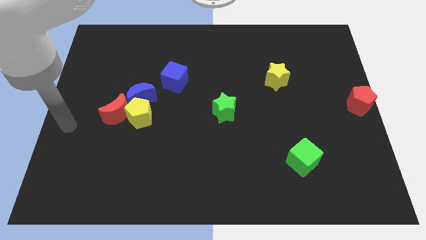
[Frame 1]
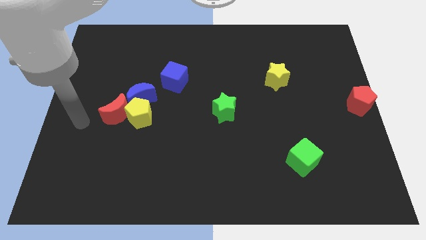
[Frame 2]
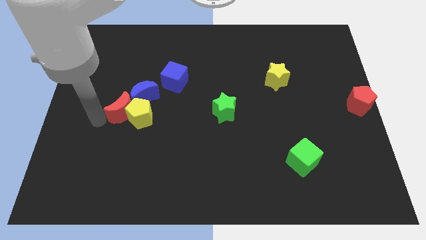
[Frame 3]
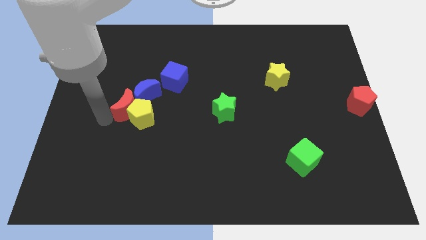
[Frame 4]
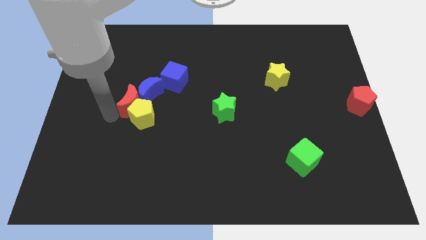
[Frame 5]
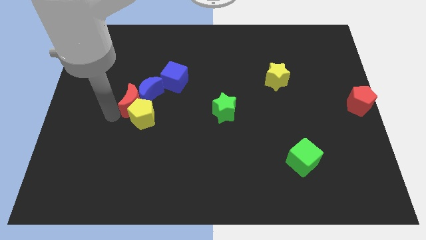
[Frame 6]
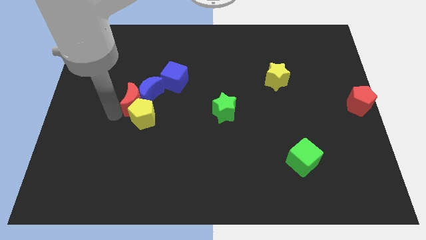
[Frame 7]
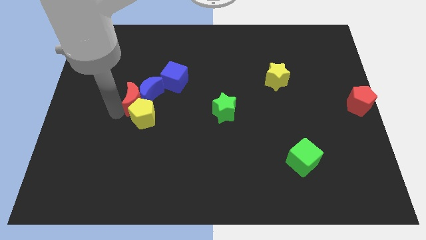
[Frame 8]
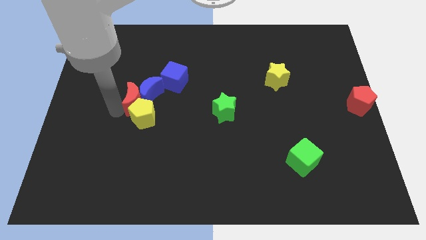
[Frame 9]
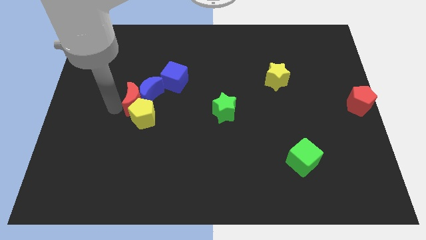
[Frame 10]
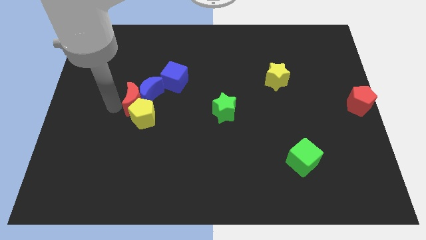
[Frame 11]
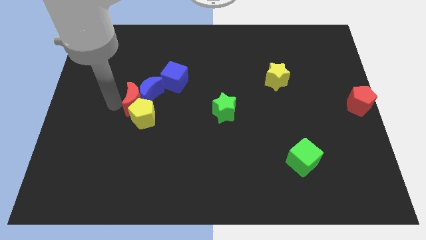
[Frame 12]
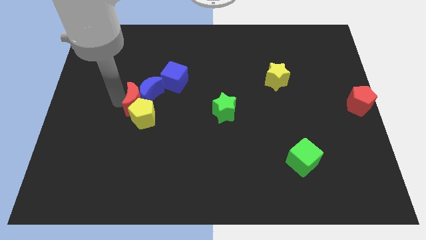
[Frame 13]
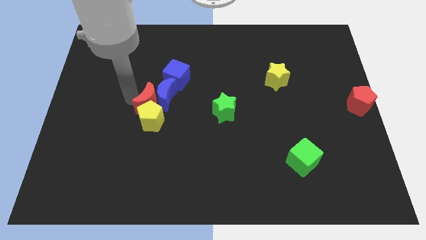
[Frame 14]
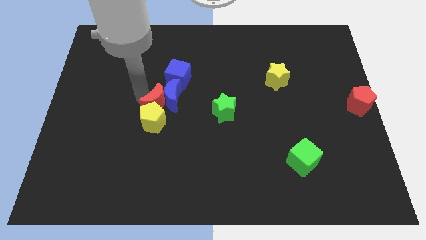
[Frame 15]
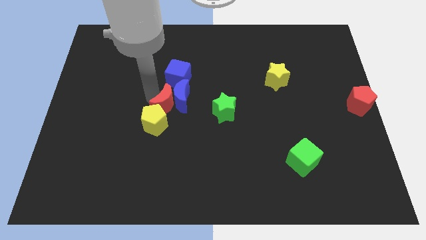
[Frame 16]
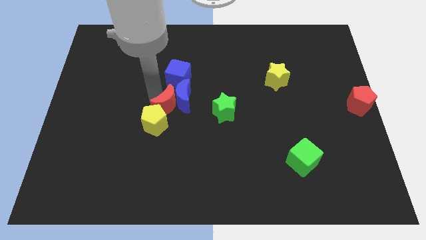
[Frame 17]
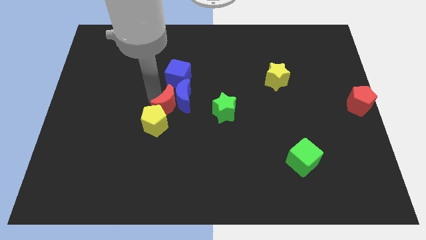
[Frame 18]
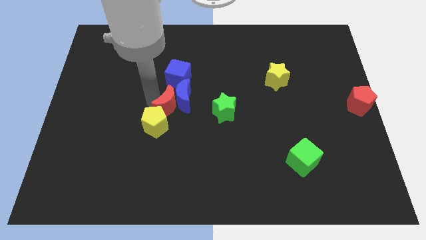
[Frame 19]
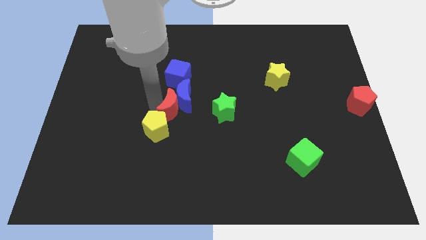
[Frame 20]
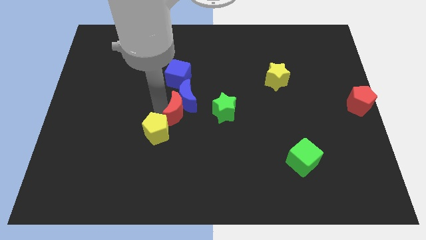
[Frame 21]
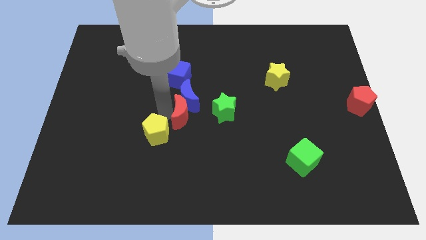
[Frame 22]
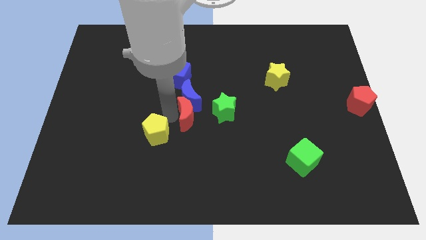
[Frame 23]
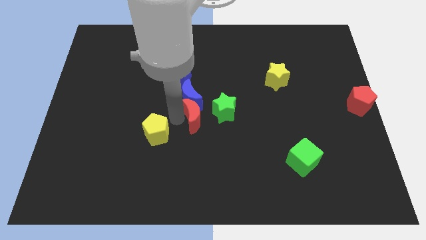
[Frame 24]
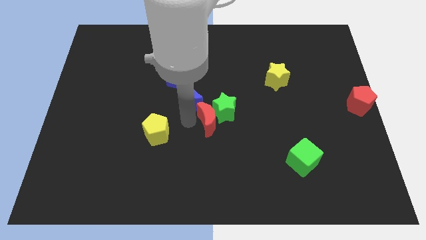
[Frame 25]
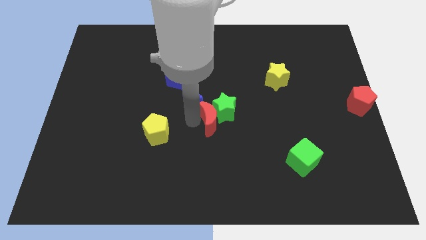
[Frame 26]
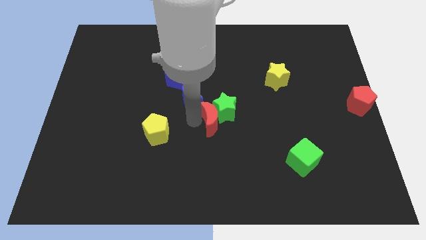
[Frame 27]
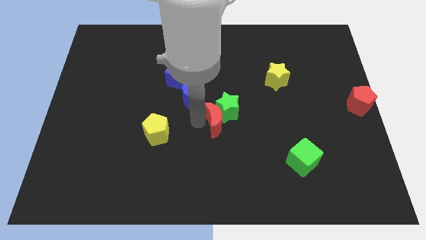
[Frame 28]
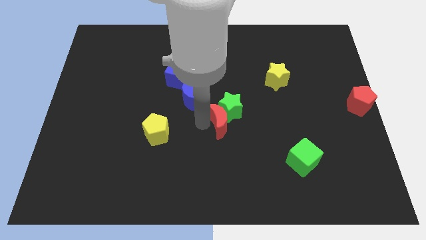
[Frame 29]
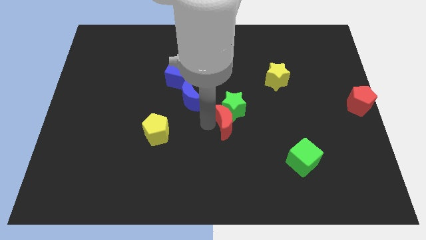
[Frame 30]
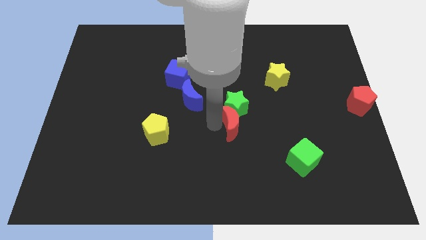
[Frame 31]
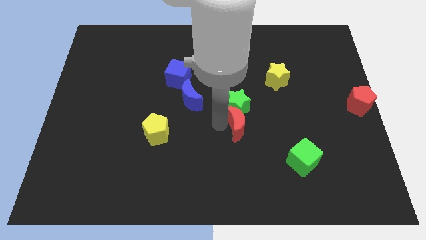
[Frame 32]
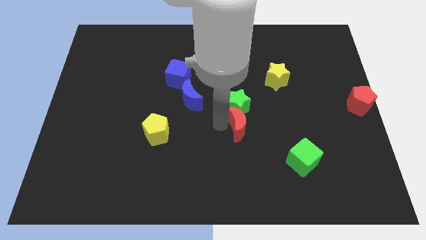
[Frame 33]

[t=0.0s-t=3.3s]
push the red moon into the green star

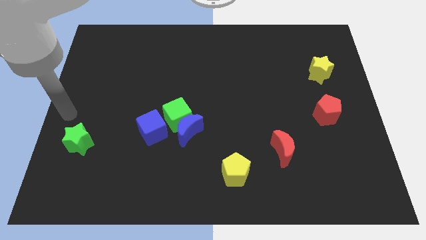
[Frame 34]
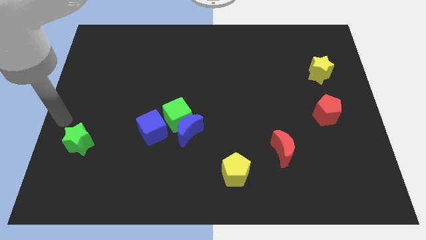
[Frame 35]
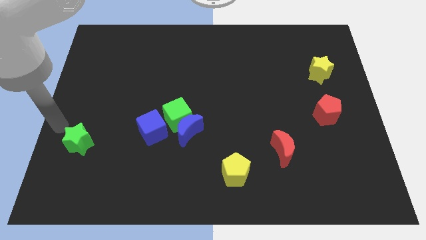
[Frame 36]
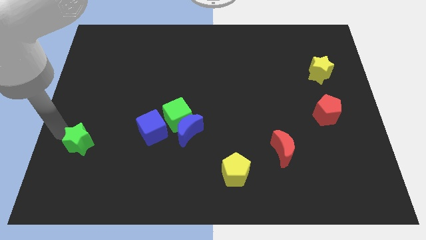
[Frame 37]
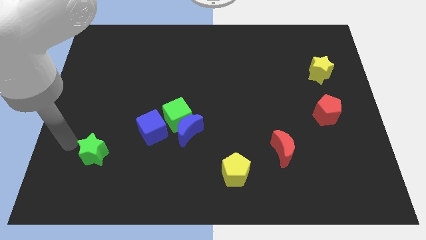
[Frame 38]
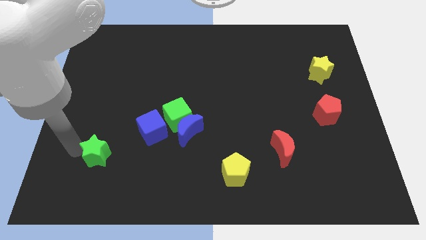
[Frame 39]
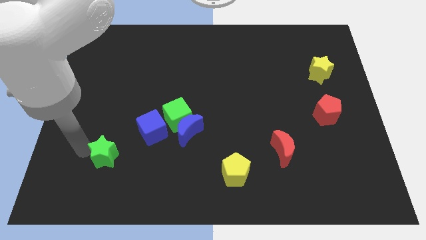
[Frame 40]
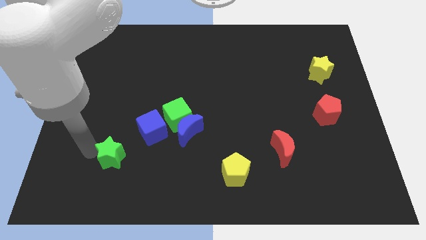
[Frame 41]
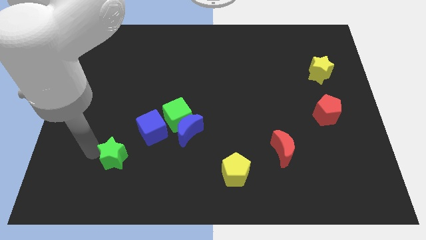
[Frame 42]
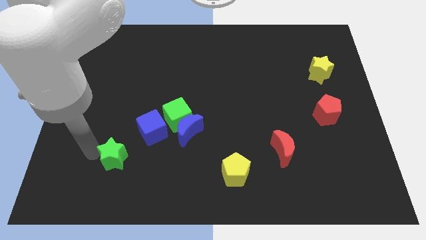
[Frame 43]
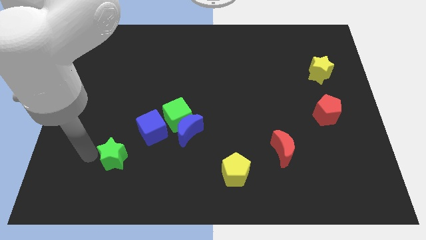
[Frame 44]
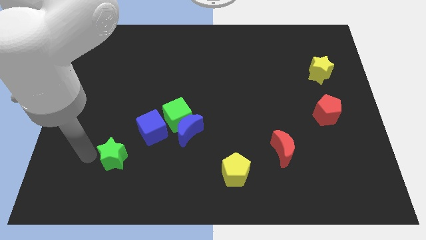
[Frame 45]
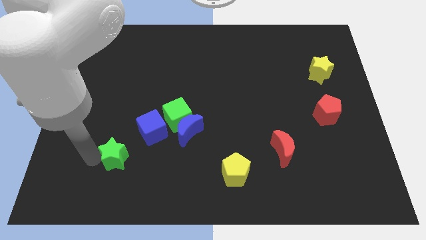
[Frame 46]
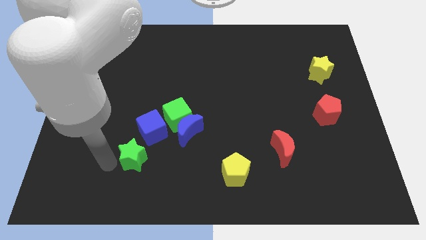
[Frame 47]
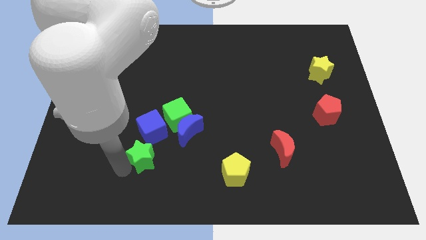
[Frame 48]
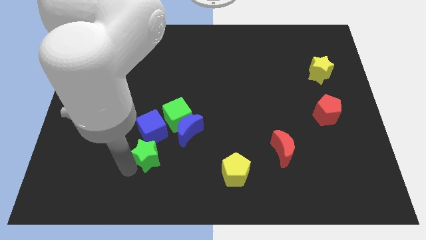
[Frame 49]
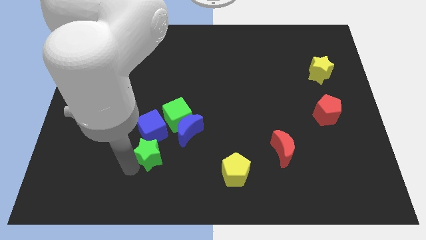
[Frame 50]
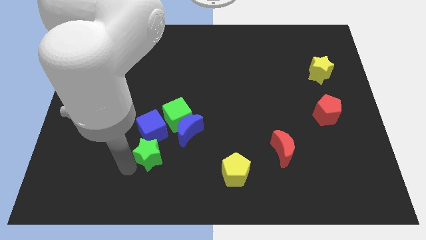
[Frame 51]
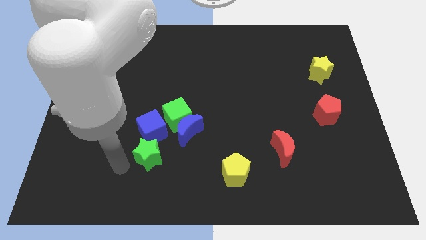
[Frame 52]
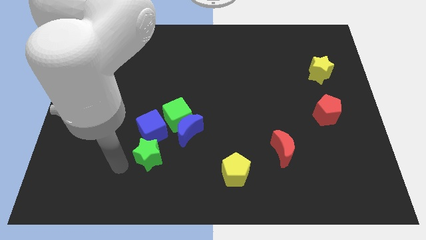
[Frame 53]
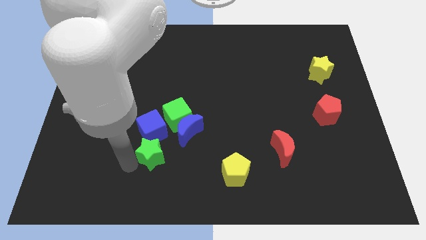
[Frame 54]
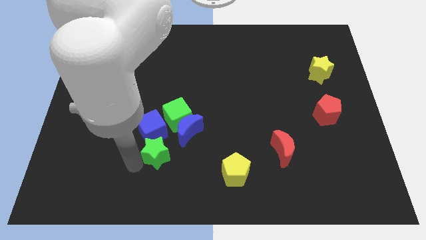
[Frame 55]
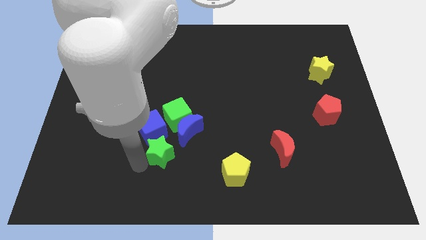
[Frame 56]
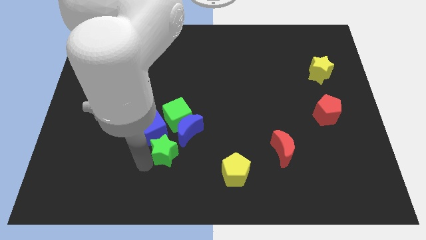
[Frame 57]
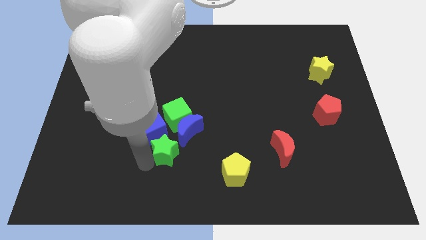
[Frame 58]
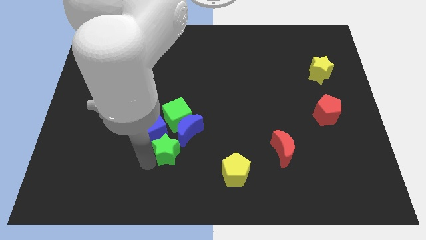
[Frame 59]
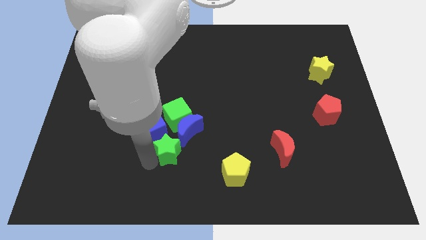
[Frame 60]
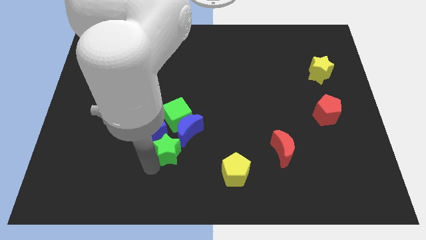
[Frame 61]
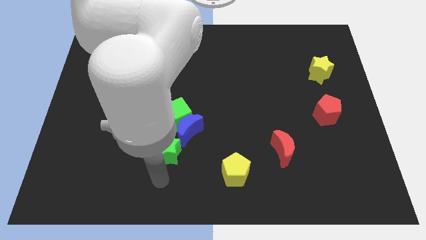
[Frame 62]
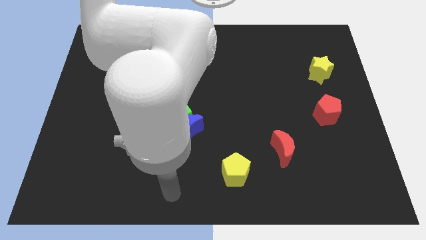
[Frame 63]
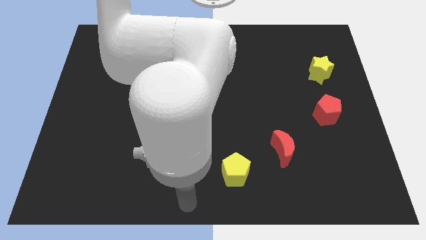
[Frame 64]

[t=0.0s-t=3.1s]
place green star below the blue cube

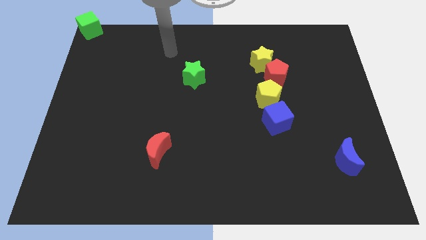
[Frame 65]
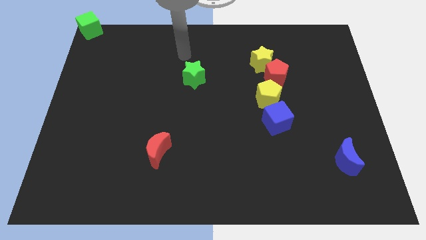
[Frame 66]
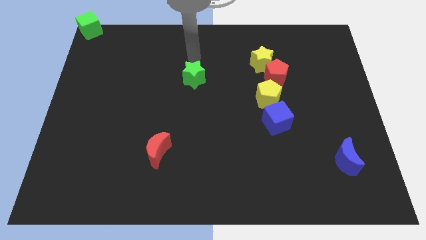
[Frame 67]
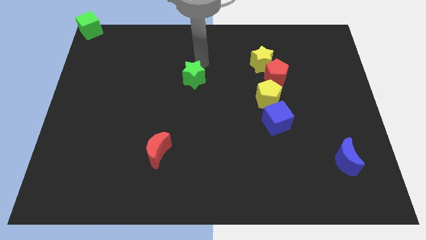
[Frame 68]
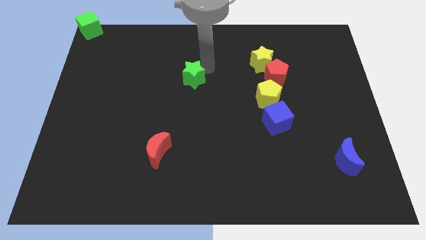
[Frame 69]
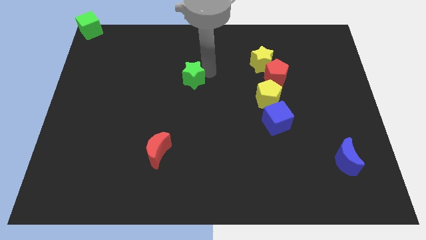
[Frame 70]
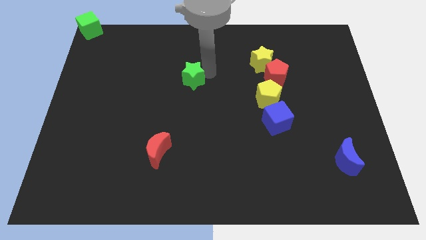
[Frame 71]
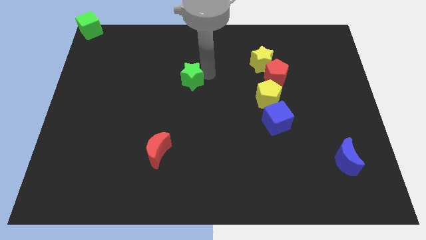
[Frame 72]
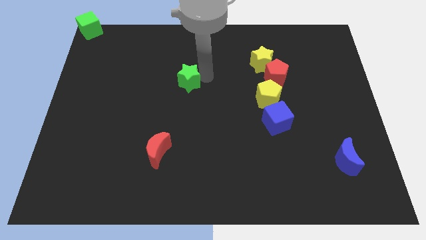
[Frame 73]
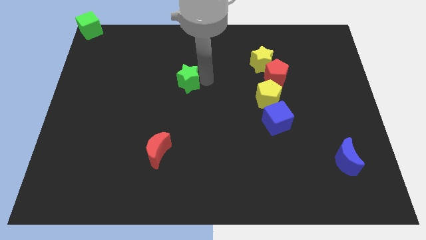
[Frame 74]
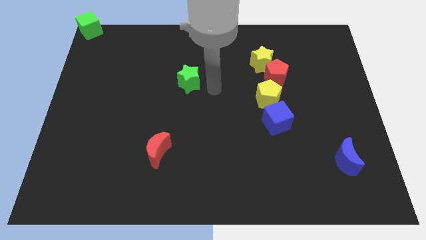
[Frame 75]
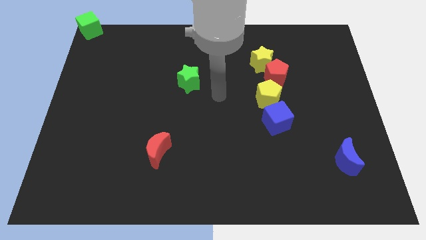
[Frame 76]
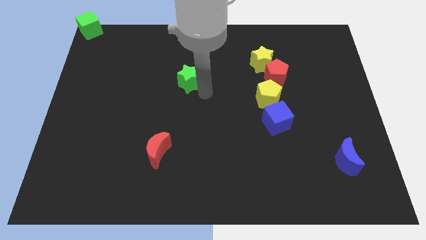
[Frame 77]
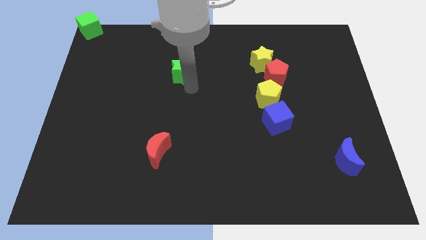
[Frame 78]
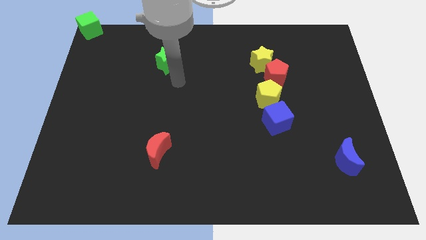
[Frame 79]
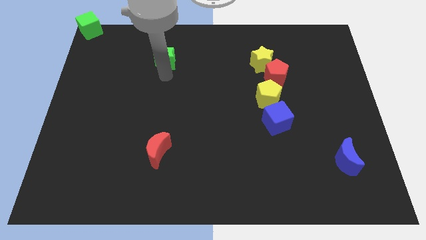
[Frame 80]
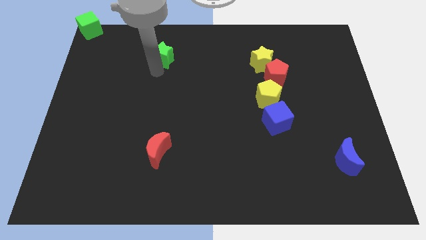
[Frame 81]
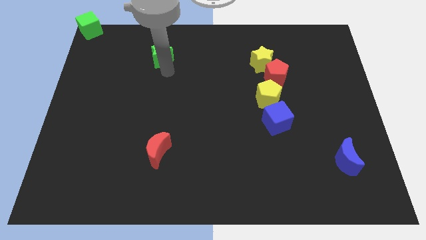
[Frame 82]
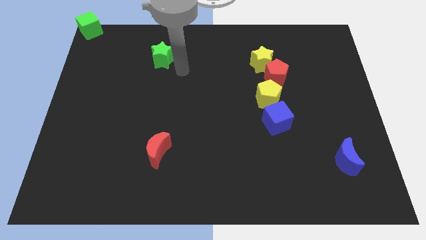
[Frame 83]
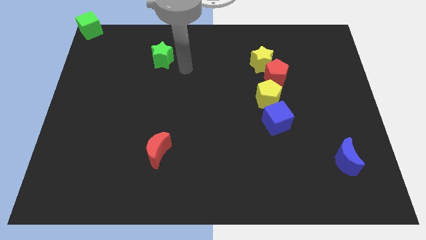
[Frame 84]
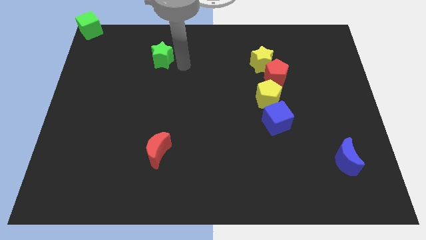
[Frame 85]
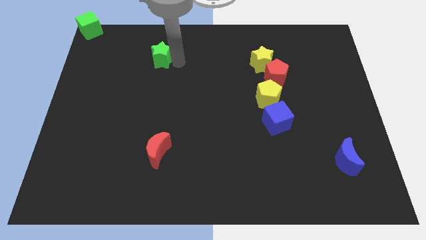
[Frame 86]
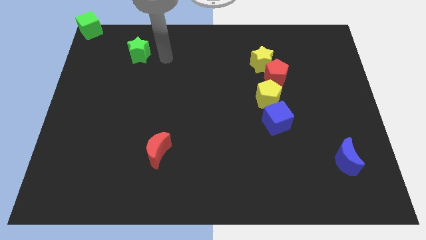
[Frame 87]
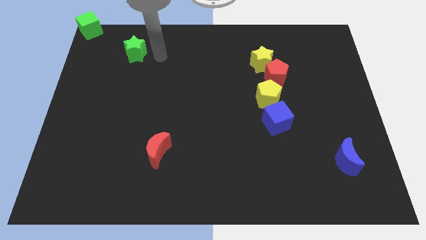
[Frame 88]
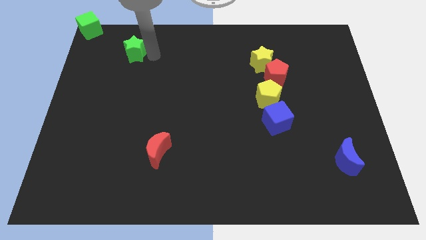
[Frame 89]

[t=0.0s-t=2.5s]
push the green star towards the top left side of the board

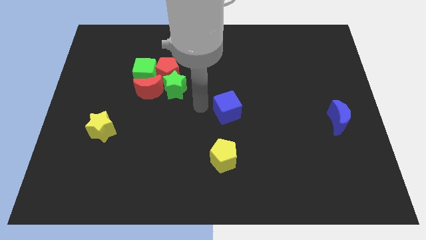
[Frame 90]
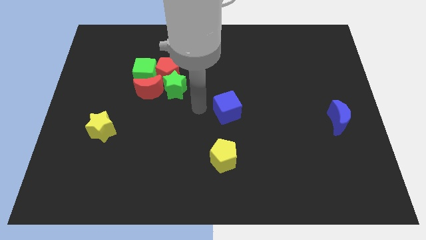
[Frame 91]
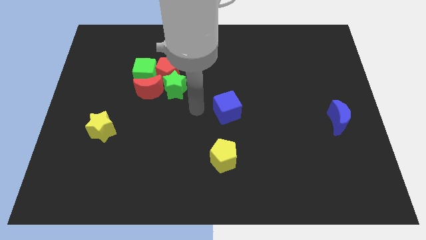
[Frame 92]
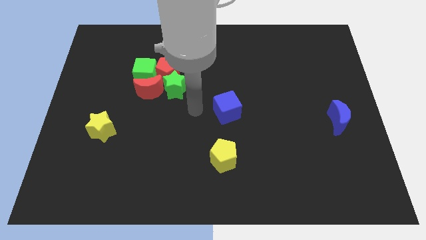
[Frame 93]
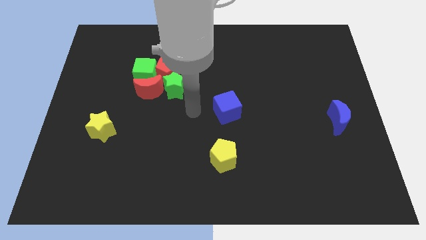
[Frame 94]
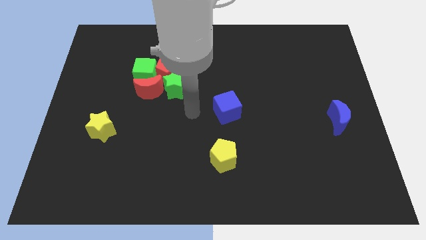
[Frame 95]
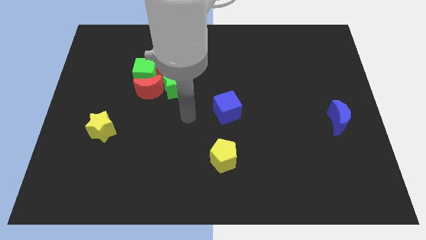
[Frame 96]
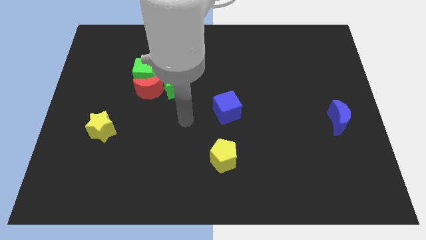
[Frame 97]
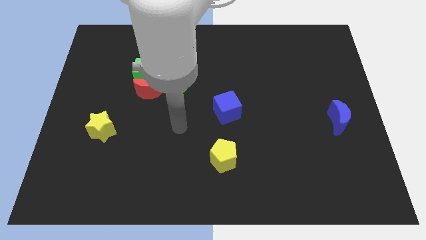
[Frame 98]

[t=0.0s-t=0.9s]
move the arm away from the blue cube
